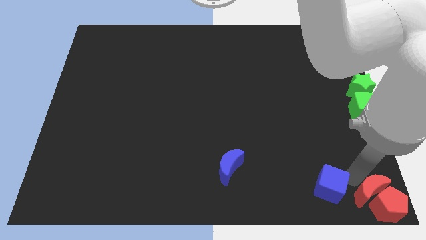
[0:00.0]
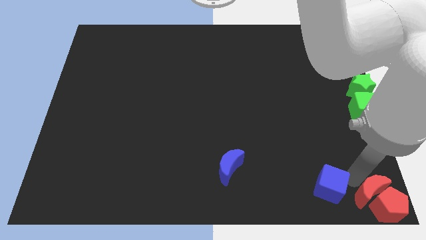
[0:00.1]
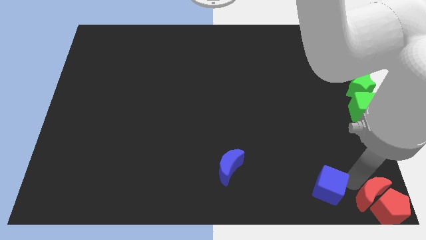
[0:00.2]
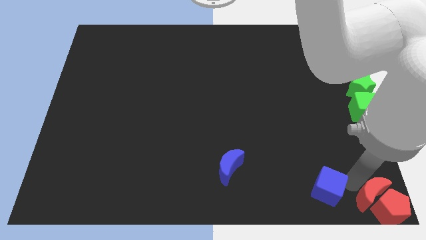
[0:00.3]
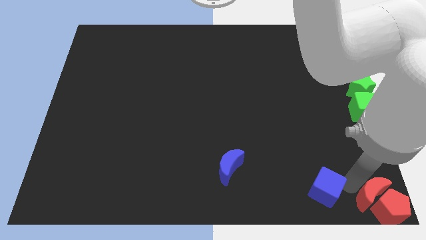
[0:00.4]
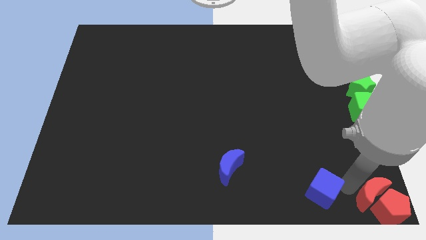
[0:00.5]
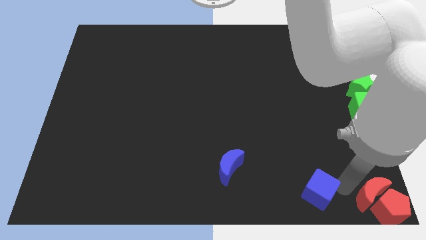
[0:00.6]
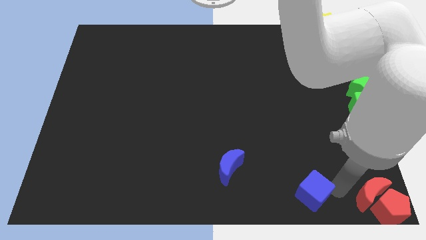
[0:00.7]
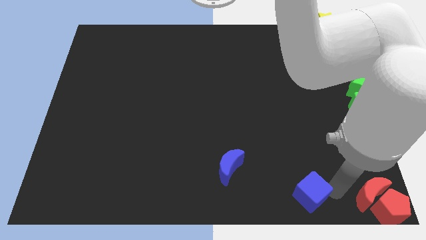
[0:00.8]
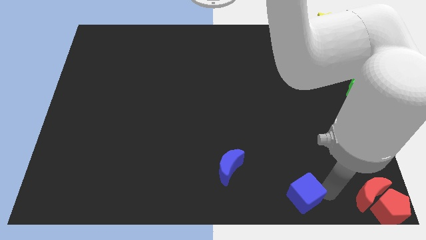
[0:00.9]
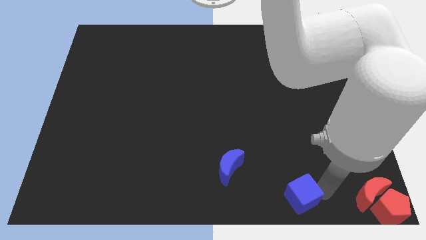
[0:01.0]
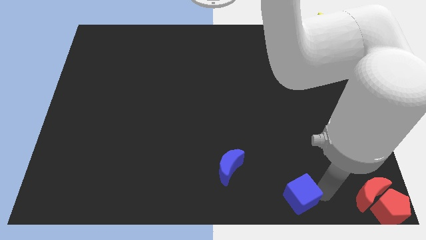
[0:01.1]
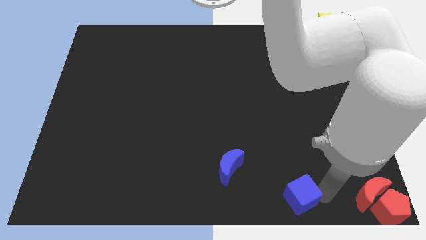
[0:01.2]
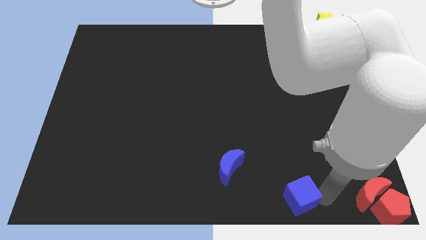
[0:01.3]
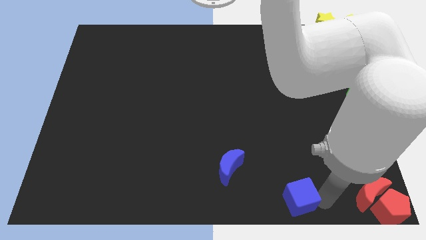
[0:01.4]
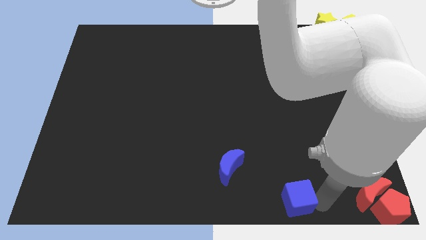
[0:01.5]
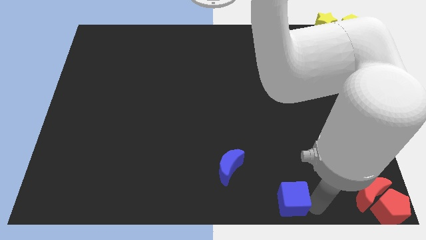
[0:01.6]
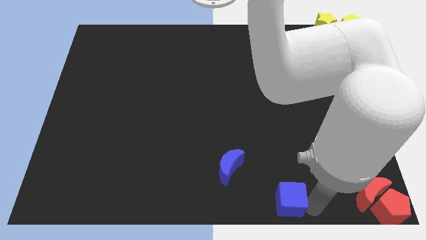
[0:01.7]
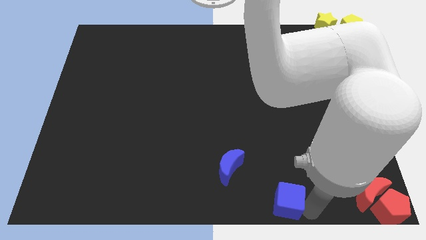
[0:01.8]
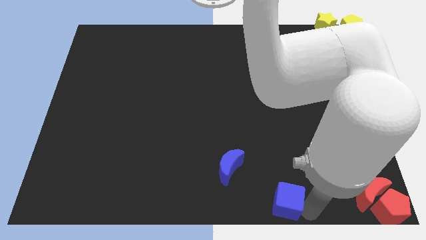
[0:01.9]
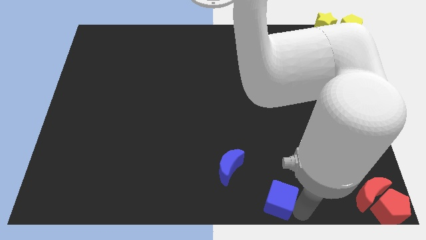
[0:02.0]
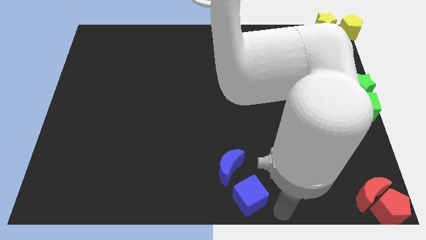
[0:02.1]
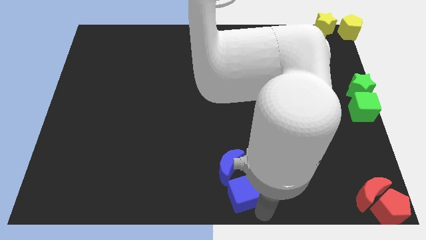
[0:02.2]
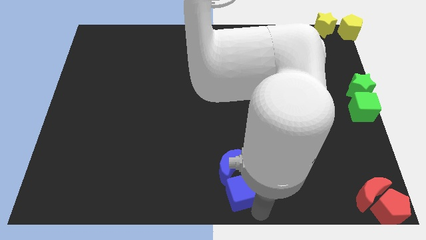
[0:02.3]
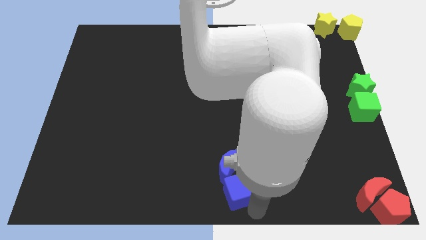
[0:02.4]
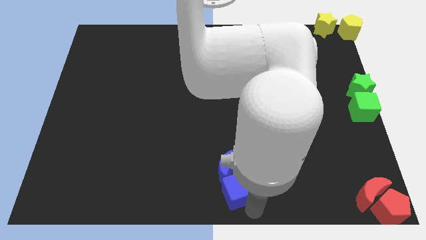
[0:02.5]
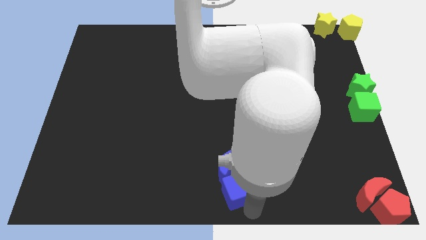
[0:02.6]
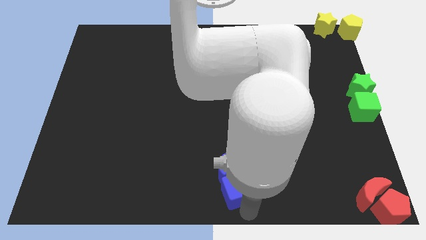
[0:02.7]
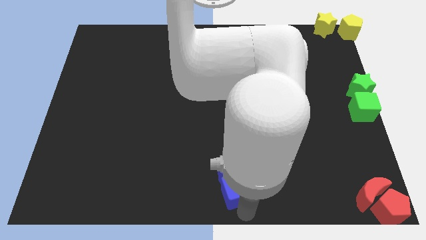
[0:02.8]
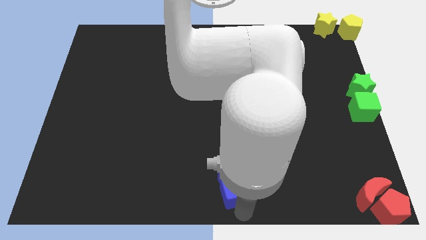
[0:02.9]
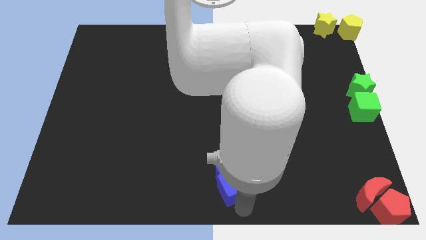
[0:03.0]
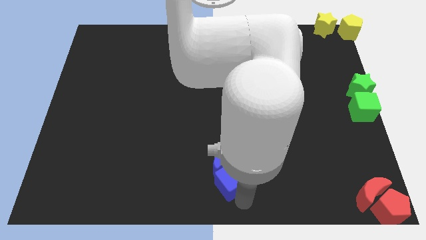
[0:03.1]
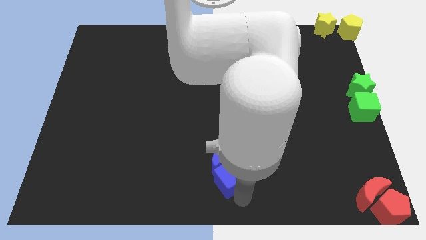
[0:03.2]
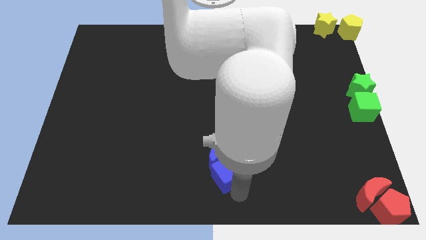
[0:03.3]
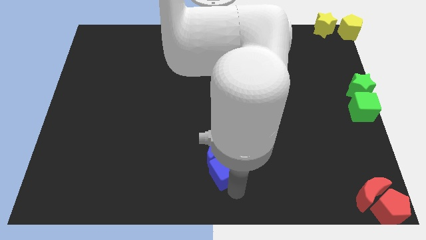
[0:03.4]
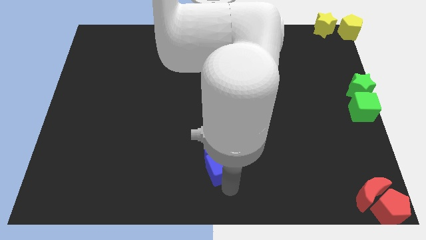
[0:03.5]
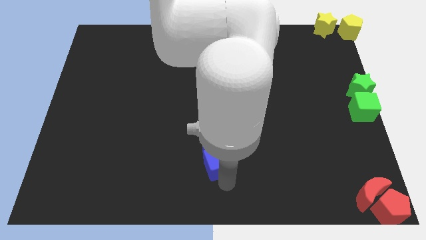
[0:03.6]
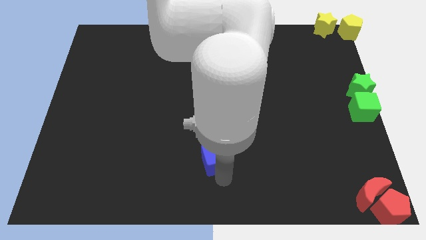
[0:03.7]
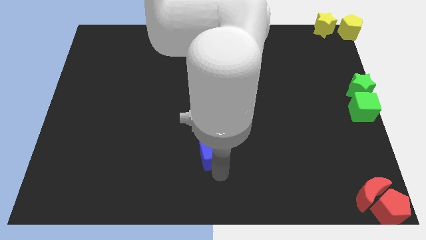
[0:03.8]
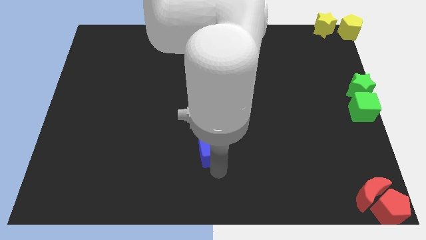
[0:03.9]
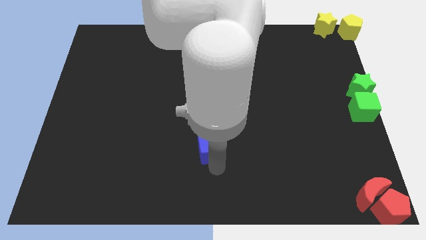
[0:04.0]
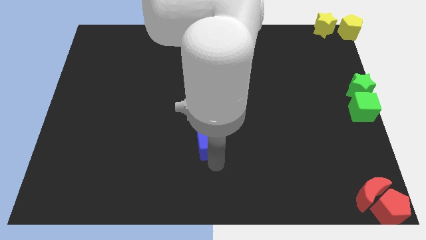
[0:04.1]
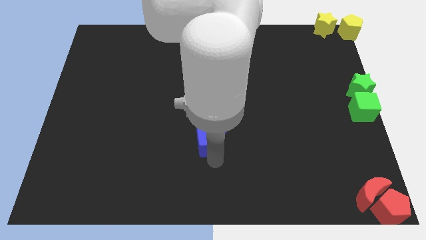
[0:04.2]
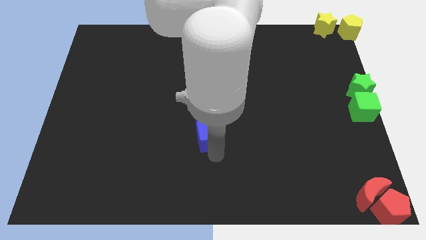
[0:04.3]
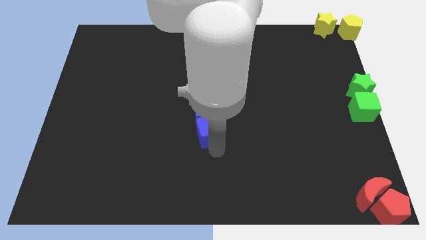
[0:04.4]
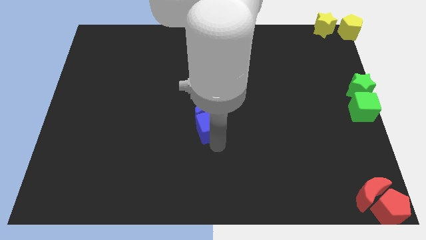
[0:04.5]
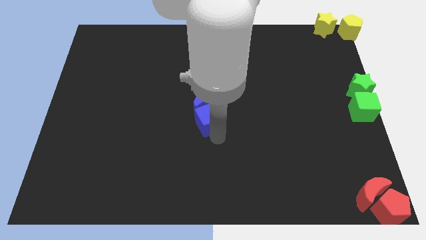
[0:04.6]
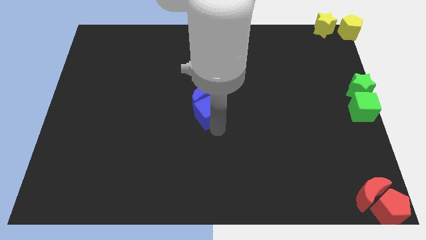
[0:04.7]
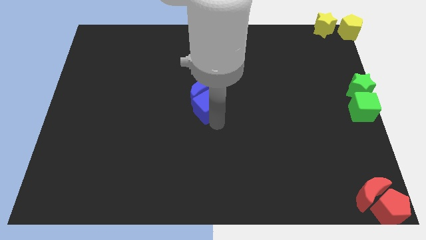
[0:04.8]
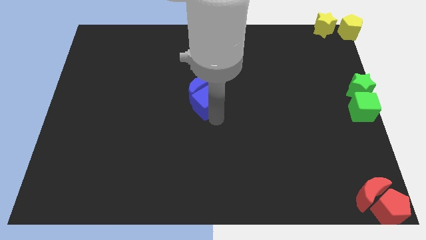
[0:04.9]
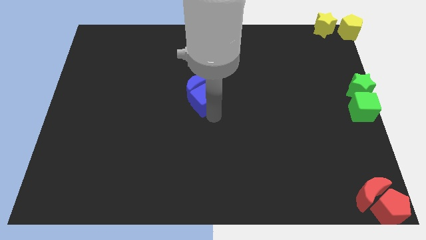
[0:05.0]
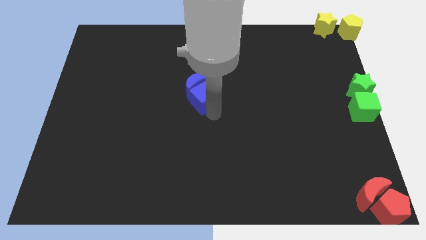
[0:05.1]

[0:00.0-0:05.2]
push the blue cube into the blue crescent

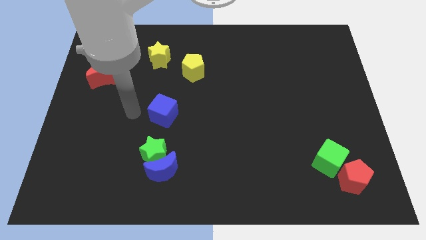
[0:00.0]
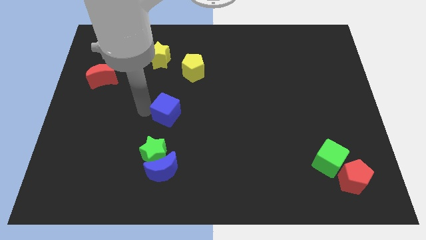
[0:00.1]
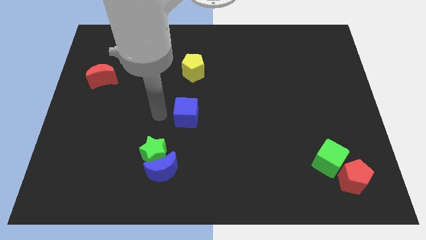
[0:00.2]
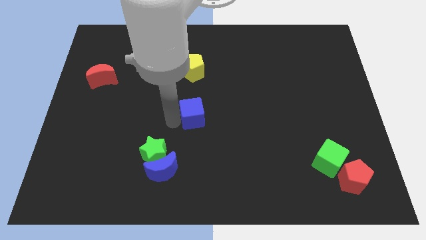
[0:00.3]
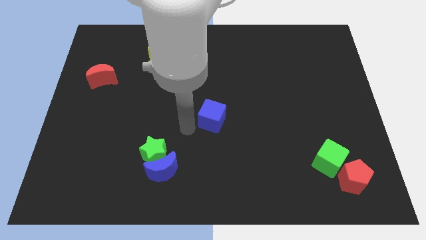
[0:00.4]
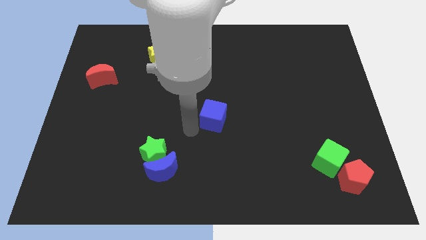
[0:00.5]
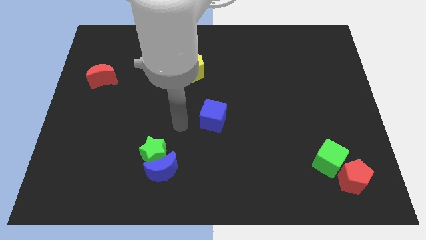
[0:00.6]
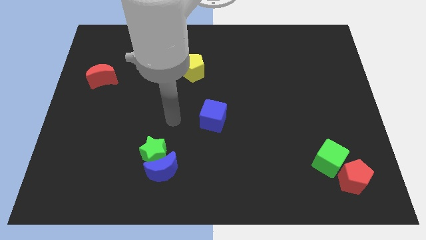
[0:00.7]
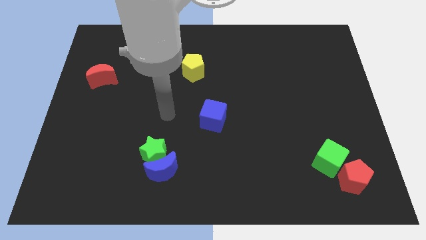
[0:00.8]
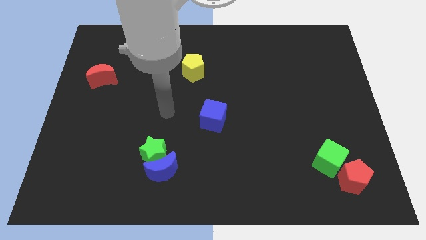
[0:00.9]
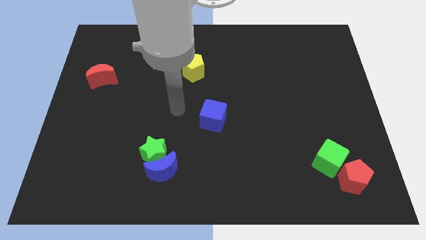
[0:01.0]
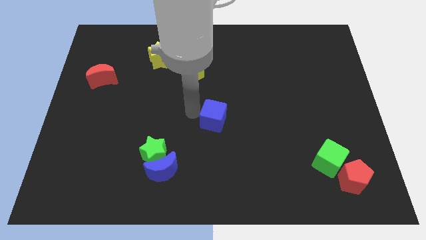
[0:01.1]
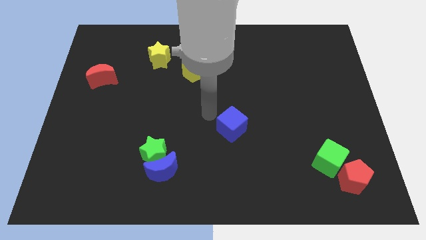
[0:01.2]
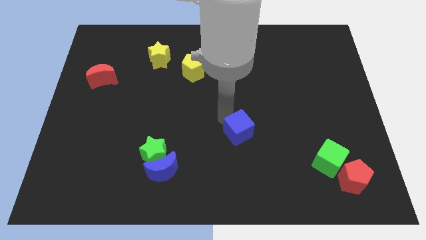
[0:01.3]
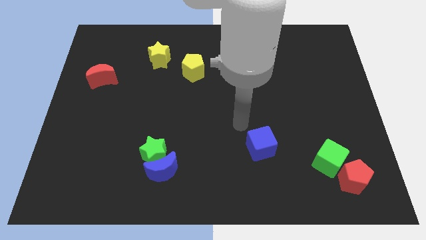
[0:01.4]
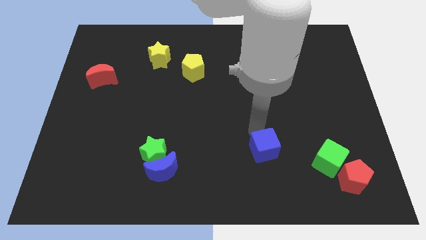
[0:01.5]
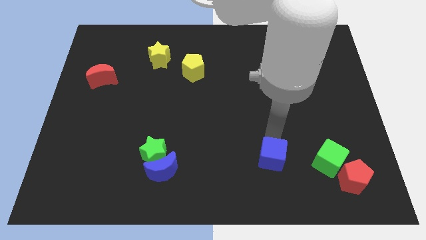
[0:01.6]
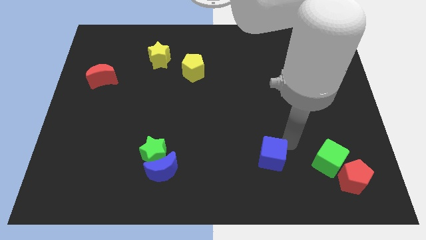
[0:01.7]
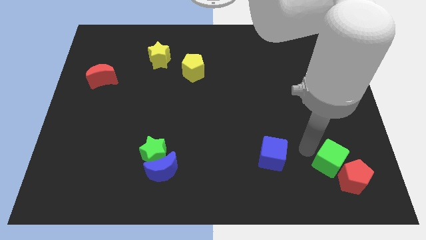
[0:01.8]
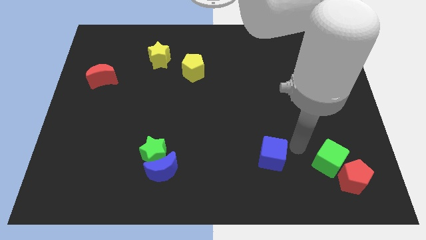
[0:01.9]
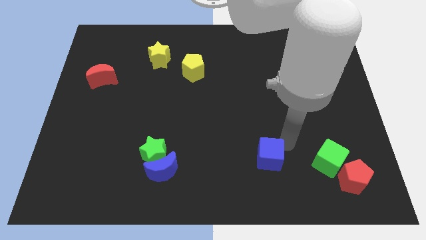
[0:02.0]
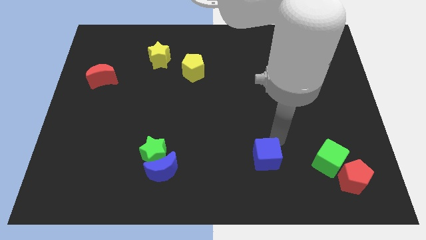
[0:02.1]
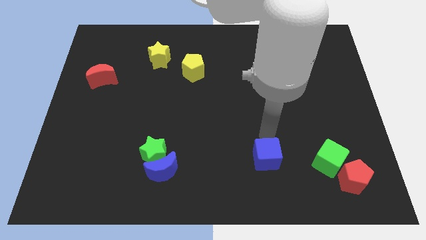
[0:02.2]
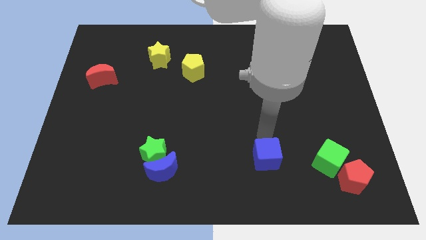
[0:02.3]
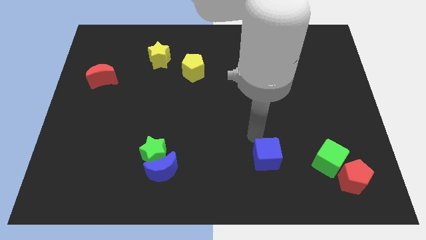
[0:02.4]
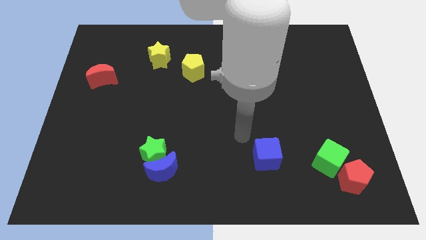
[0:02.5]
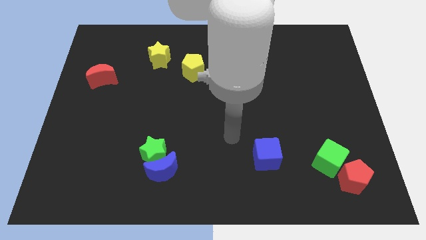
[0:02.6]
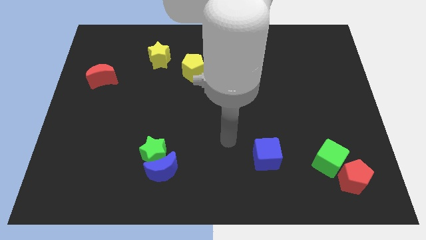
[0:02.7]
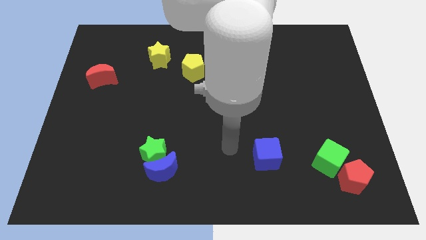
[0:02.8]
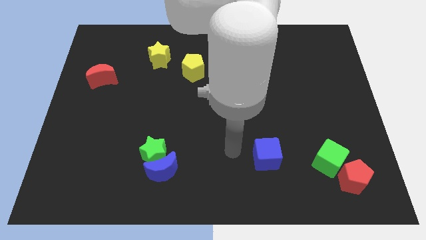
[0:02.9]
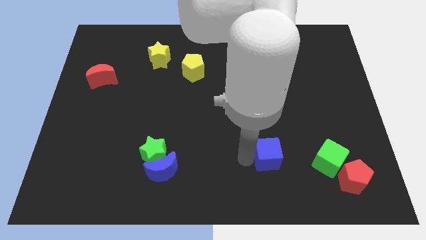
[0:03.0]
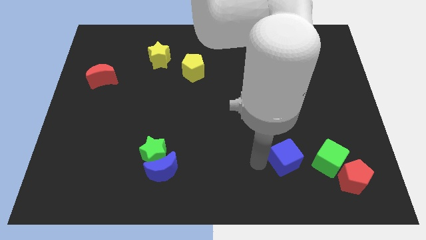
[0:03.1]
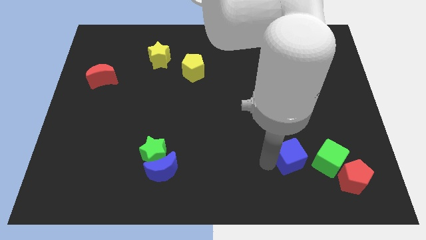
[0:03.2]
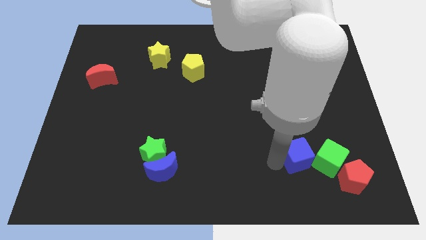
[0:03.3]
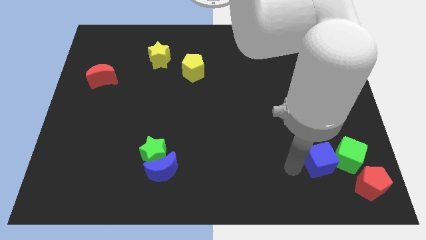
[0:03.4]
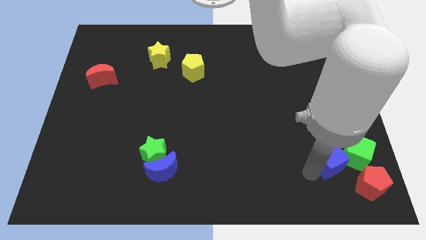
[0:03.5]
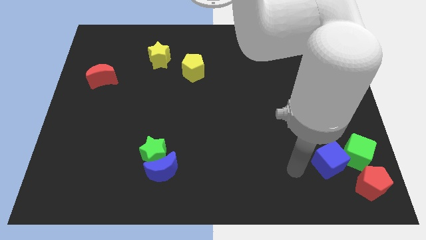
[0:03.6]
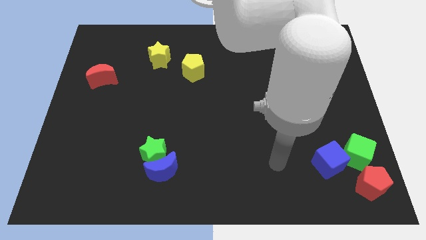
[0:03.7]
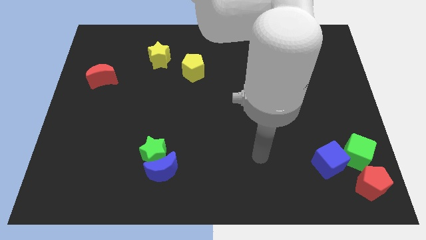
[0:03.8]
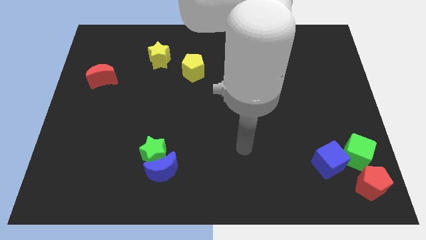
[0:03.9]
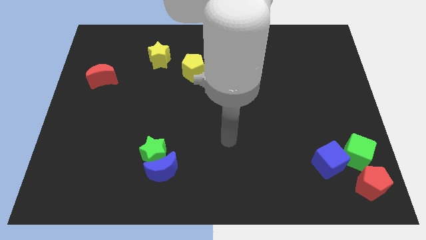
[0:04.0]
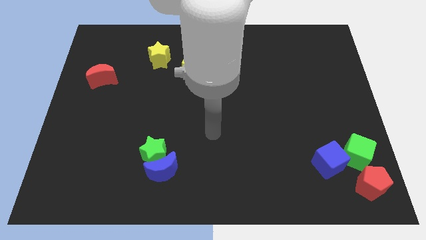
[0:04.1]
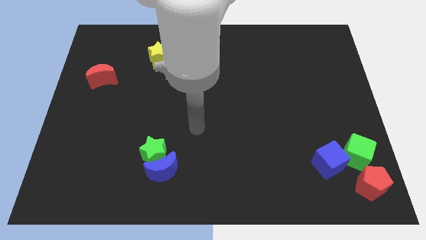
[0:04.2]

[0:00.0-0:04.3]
place the blue cube into green cube to the left
